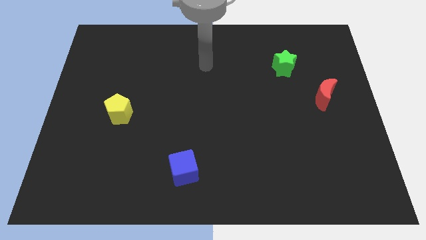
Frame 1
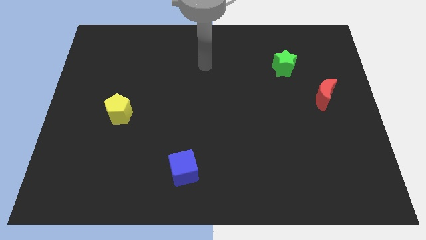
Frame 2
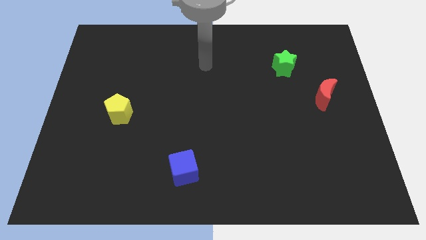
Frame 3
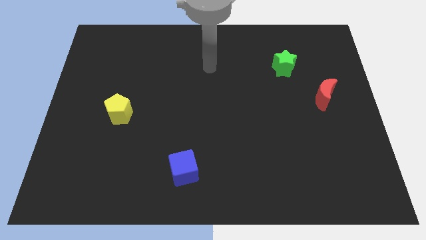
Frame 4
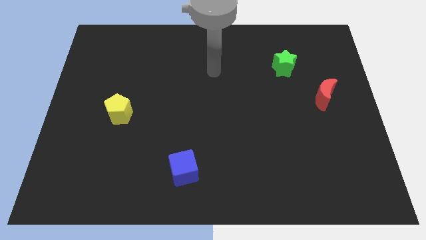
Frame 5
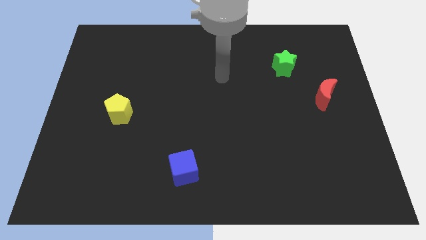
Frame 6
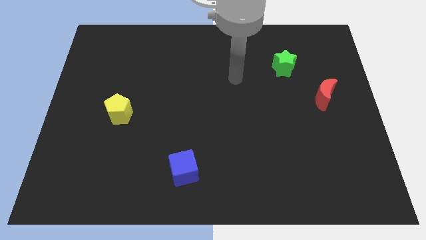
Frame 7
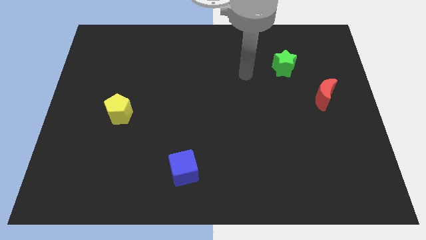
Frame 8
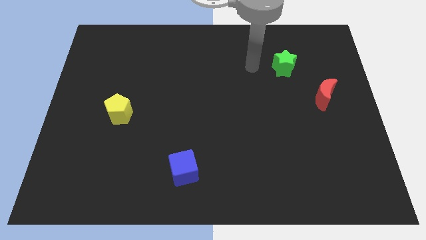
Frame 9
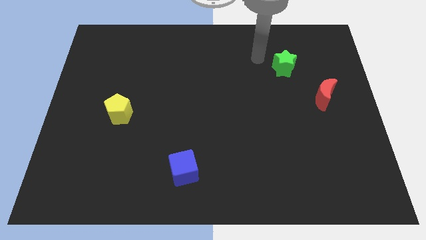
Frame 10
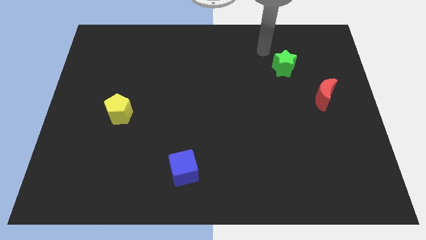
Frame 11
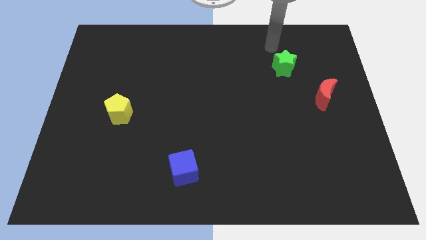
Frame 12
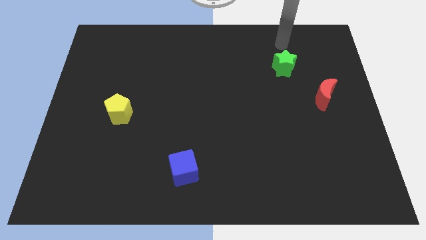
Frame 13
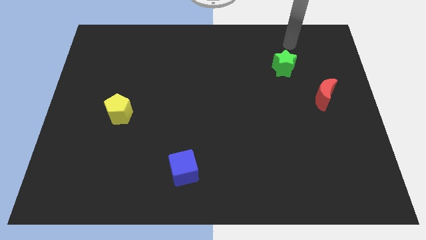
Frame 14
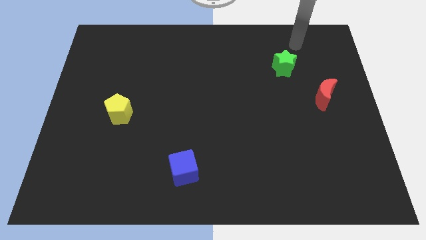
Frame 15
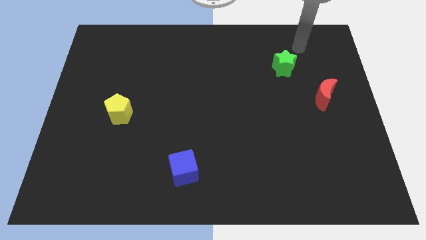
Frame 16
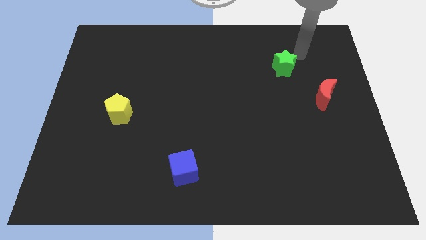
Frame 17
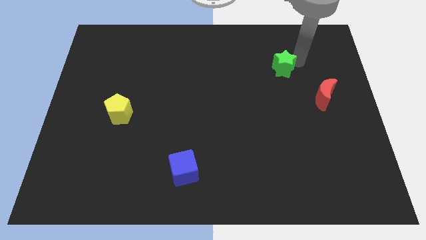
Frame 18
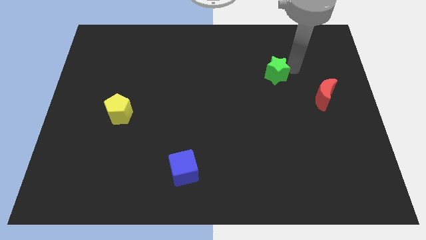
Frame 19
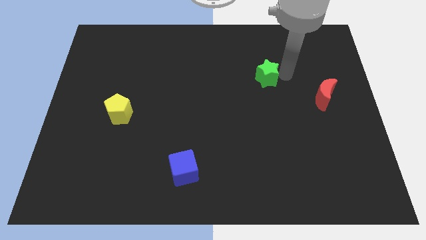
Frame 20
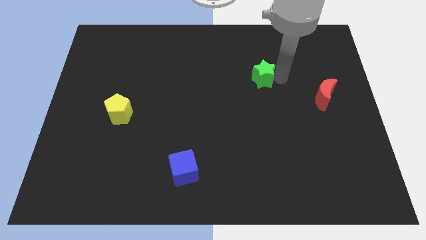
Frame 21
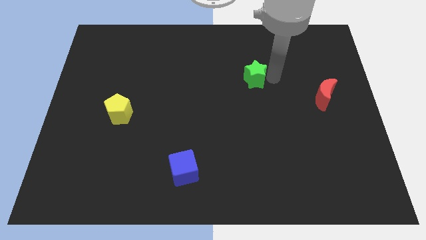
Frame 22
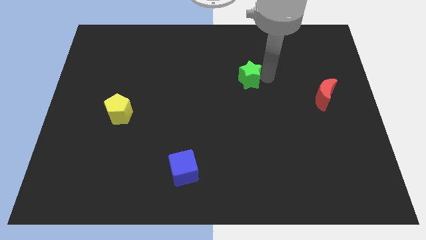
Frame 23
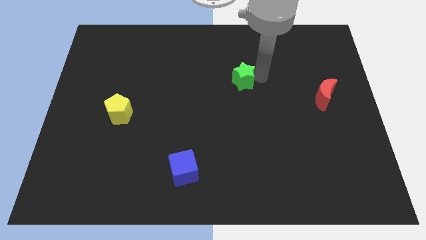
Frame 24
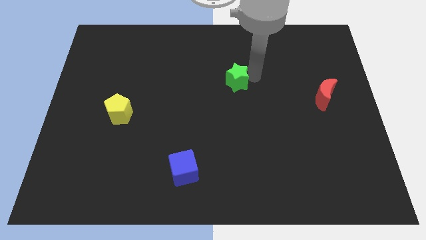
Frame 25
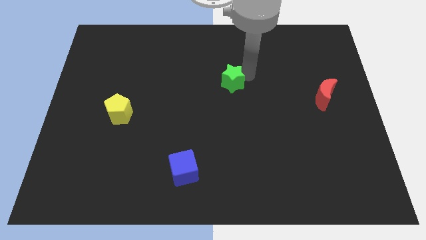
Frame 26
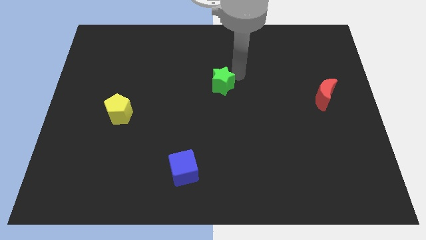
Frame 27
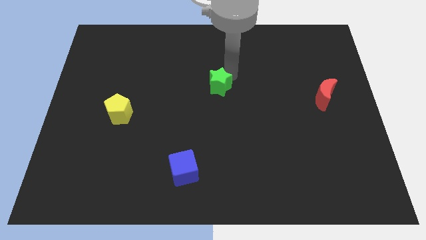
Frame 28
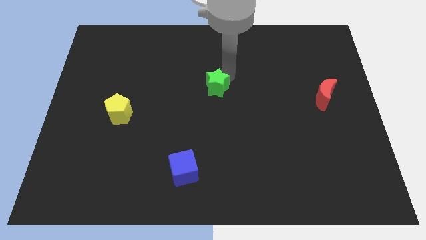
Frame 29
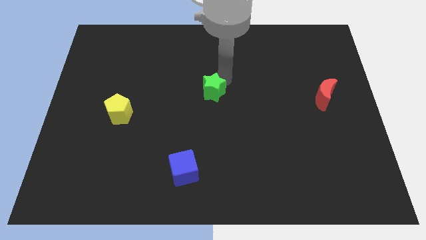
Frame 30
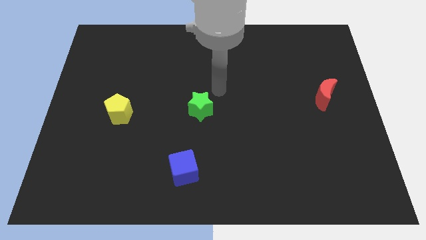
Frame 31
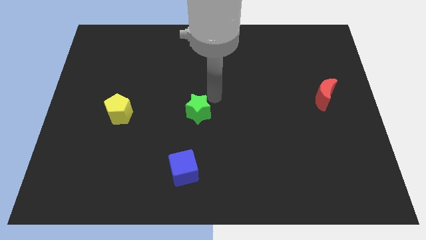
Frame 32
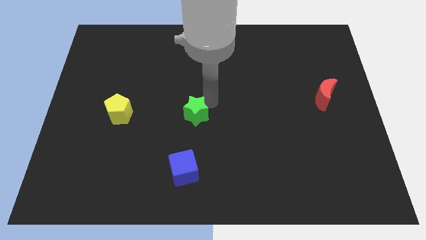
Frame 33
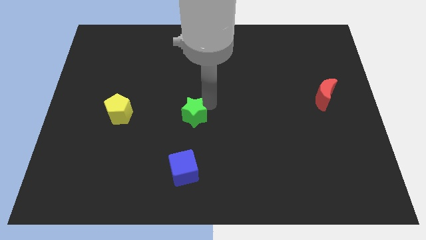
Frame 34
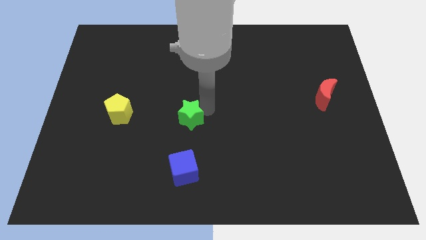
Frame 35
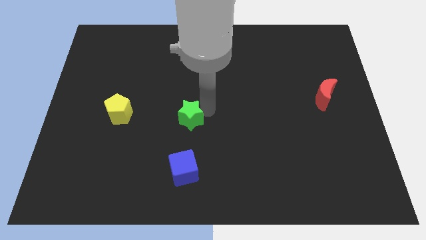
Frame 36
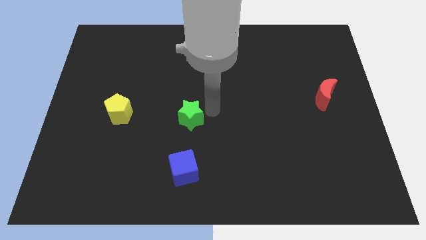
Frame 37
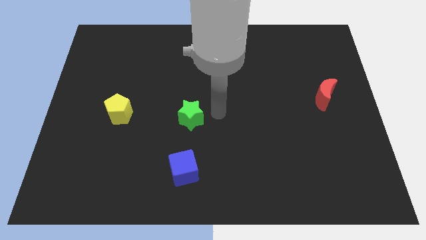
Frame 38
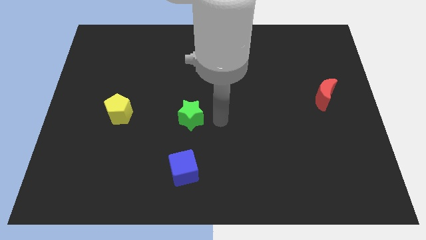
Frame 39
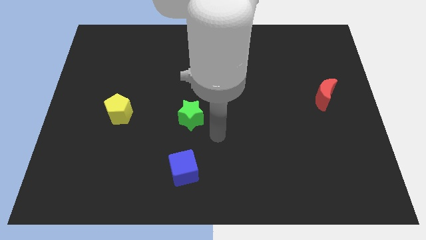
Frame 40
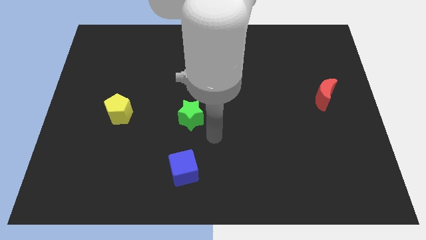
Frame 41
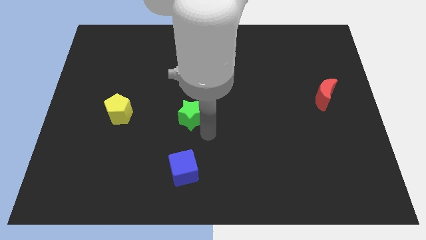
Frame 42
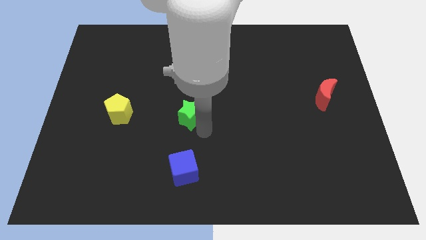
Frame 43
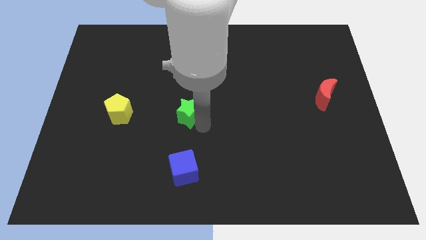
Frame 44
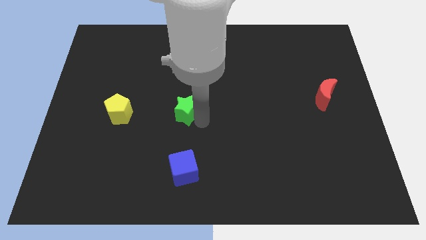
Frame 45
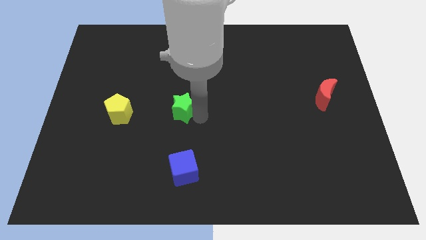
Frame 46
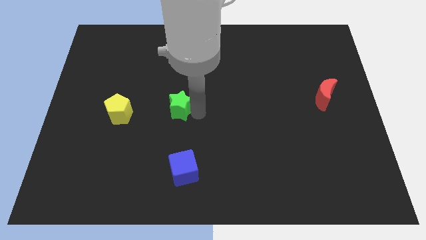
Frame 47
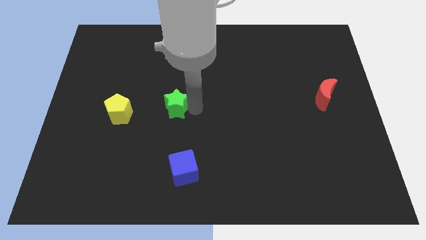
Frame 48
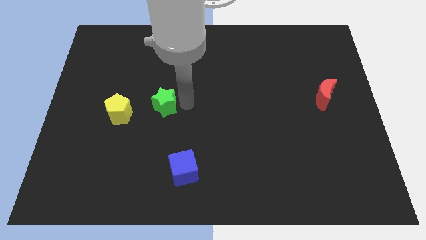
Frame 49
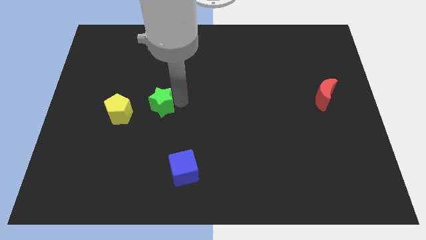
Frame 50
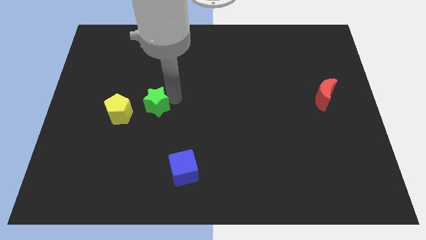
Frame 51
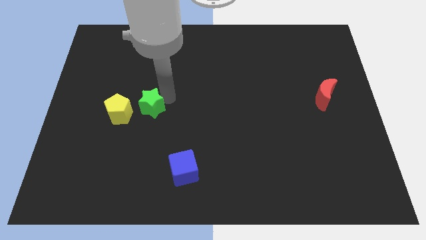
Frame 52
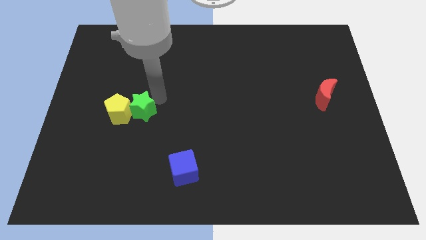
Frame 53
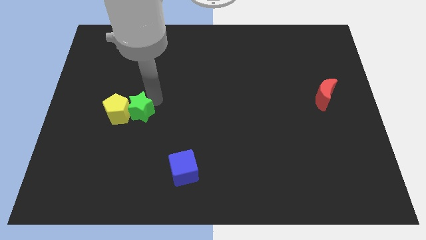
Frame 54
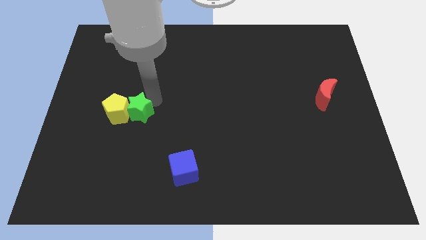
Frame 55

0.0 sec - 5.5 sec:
move the star towards the pentagon

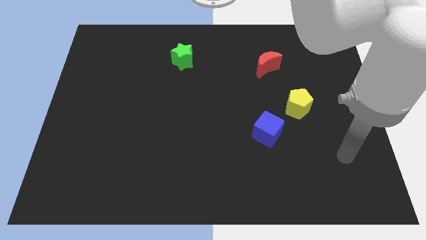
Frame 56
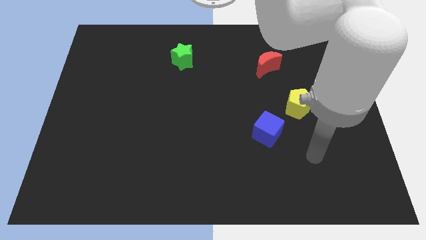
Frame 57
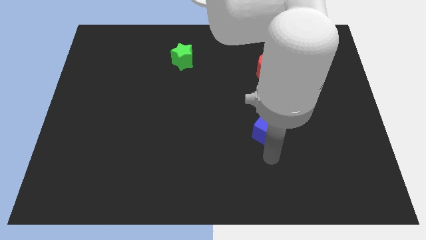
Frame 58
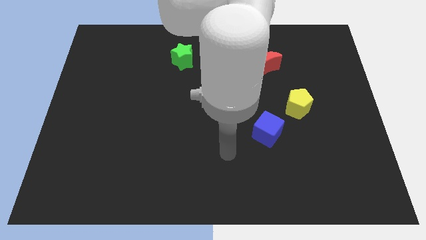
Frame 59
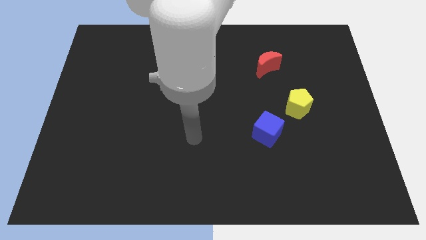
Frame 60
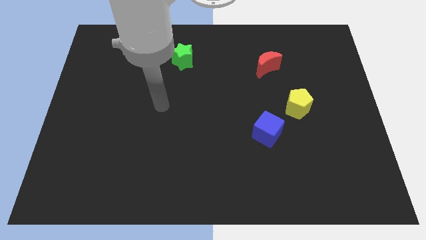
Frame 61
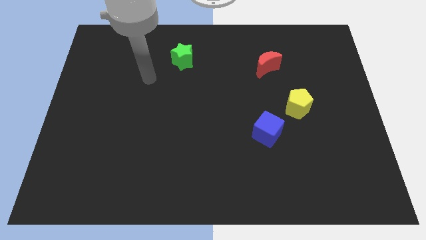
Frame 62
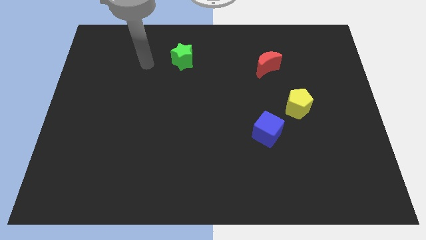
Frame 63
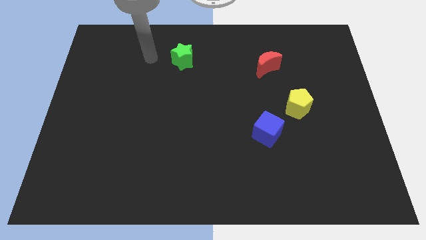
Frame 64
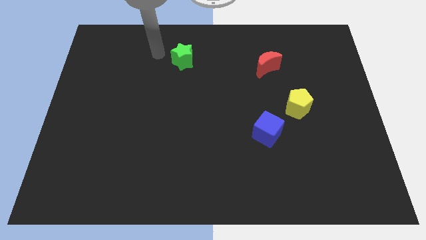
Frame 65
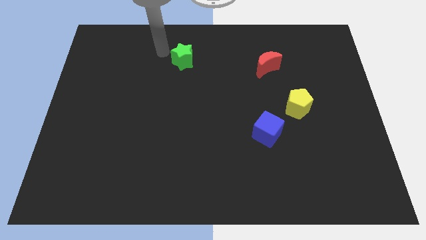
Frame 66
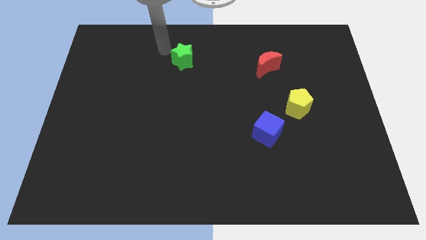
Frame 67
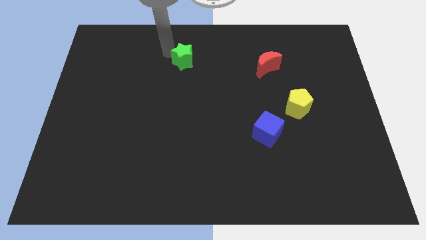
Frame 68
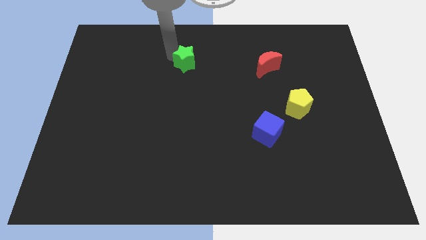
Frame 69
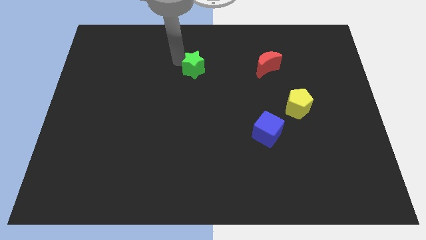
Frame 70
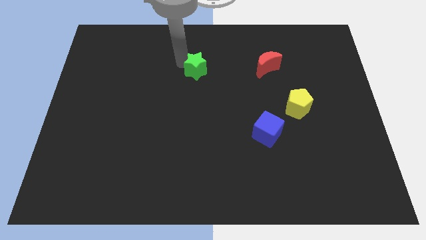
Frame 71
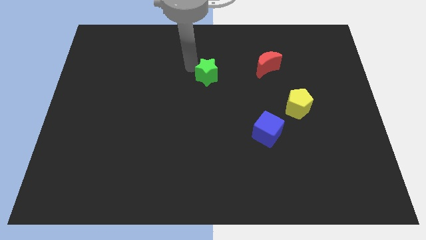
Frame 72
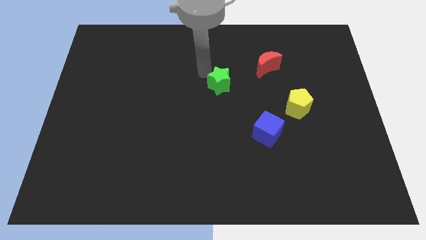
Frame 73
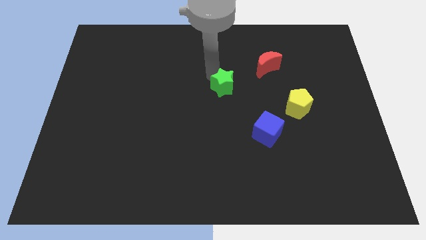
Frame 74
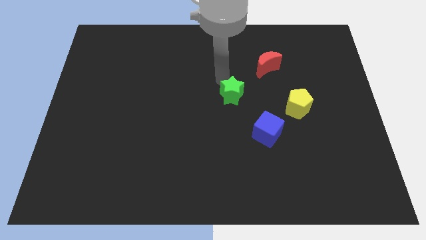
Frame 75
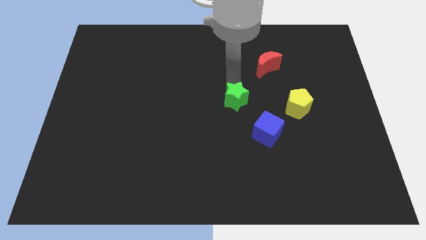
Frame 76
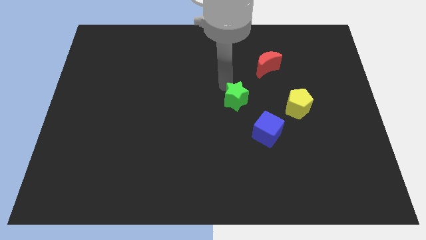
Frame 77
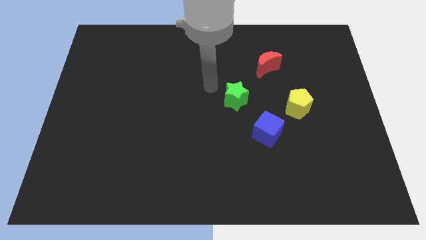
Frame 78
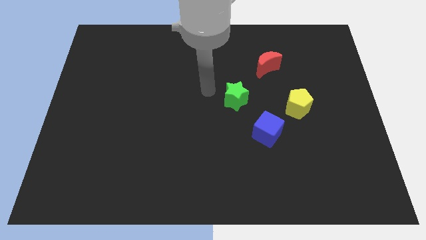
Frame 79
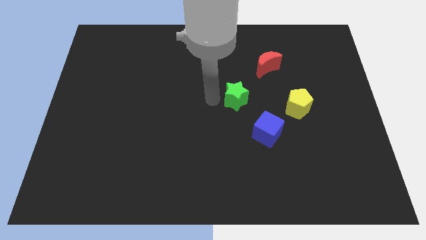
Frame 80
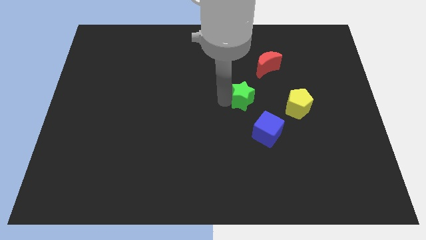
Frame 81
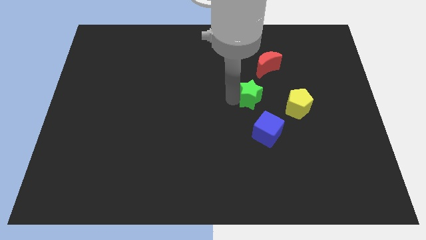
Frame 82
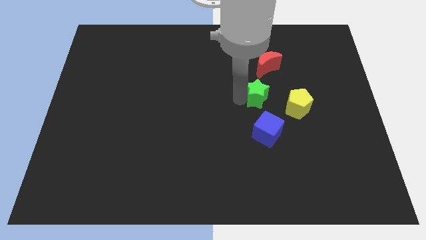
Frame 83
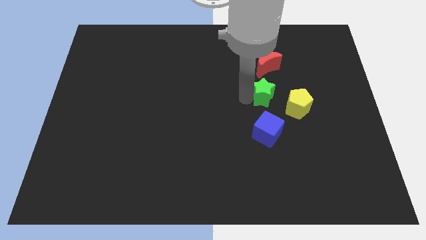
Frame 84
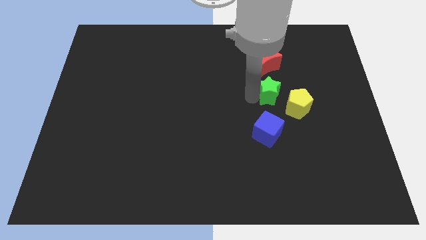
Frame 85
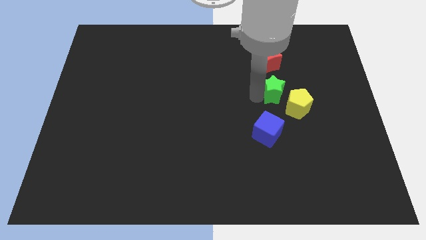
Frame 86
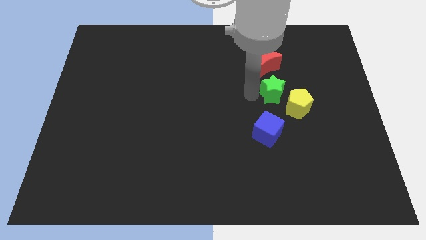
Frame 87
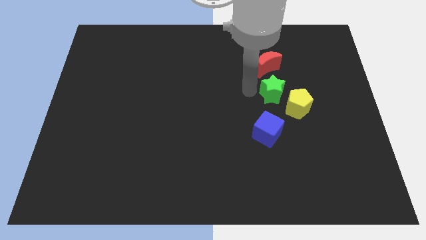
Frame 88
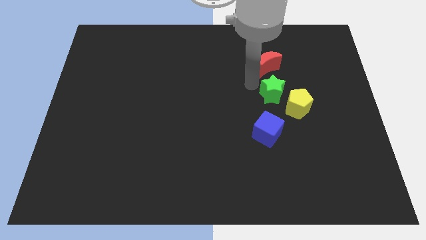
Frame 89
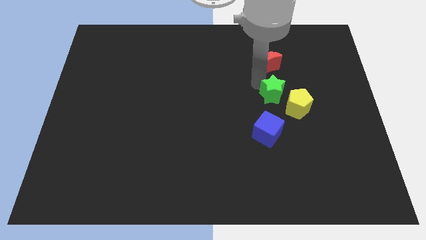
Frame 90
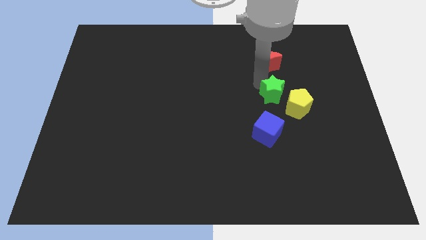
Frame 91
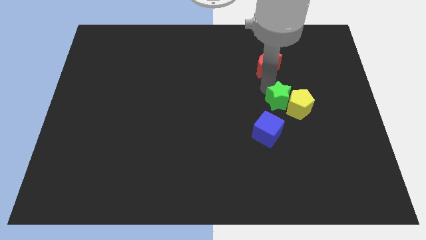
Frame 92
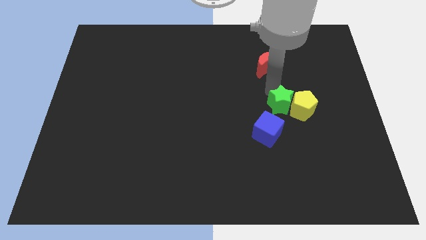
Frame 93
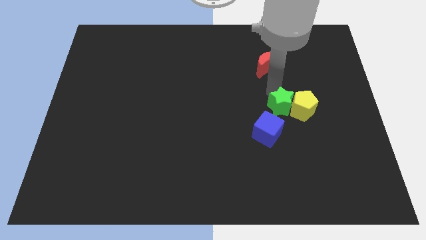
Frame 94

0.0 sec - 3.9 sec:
push the green block towards the yellow block
